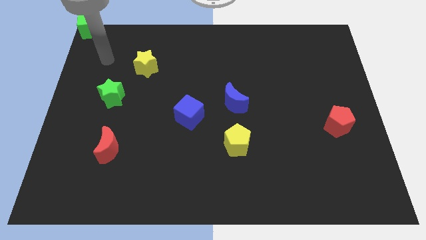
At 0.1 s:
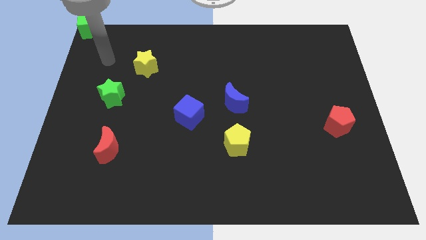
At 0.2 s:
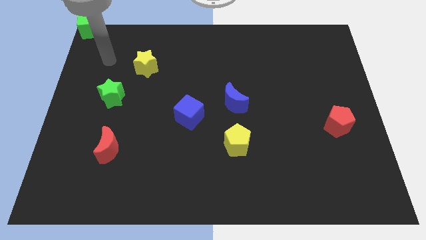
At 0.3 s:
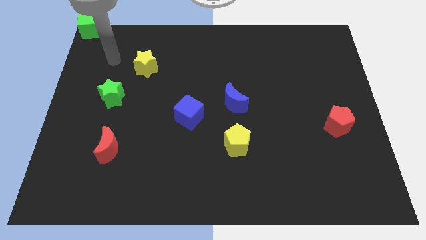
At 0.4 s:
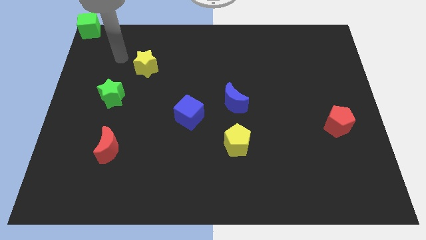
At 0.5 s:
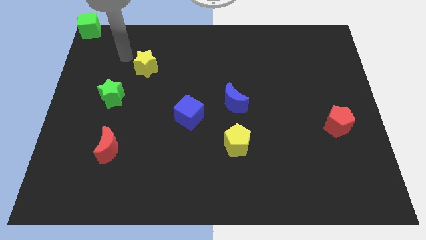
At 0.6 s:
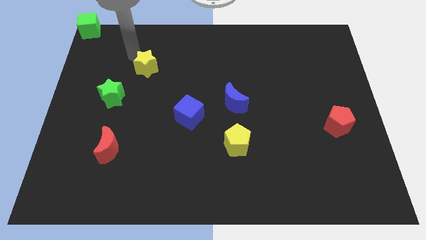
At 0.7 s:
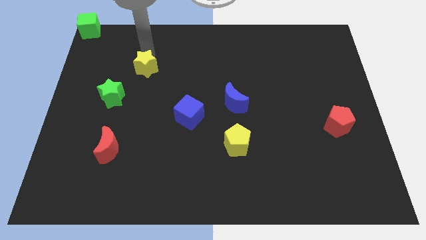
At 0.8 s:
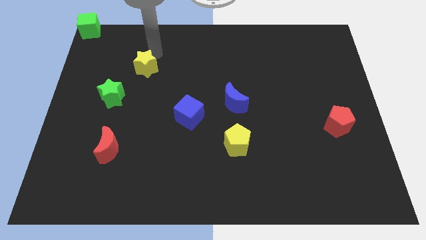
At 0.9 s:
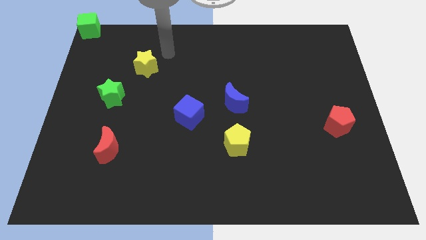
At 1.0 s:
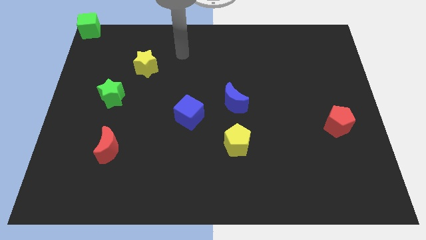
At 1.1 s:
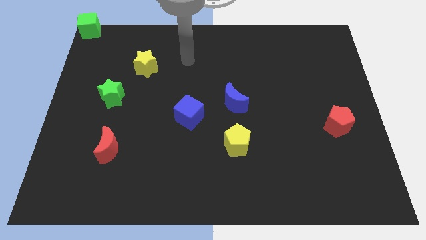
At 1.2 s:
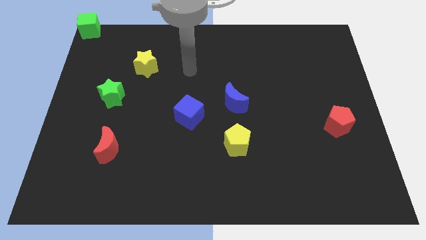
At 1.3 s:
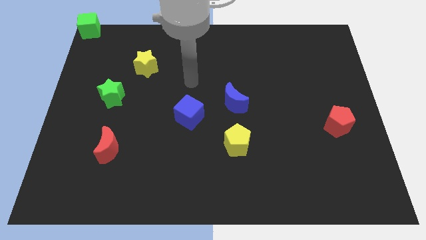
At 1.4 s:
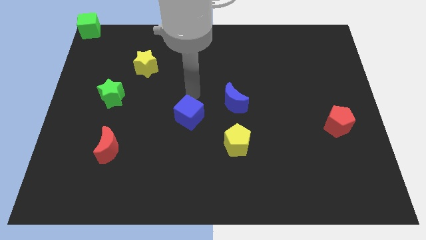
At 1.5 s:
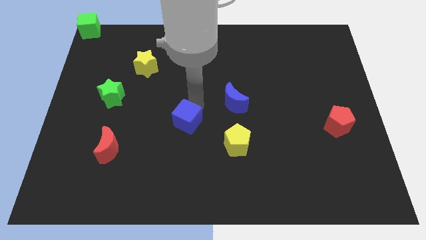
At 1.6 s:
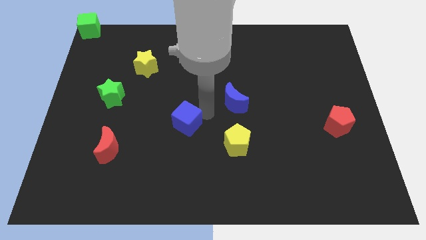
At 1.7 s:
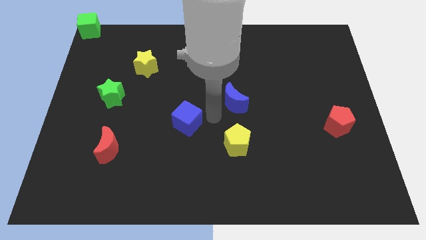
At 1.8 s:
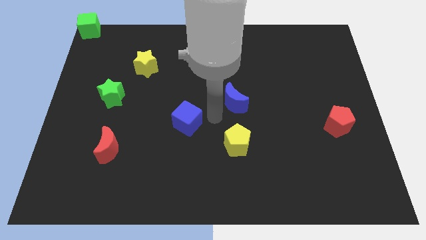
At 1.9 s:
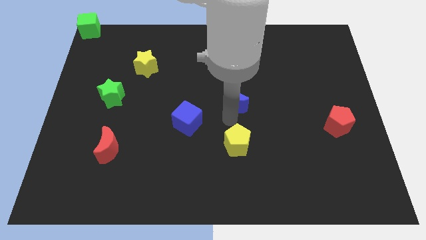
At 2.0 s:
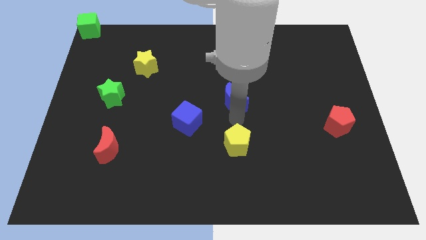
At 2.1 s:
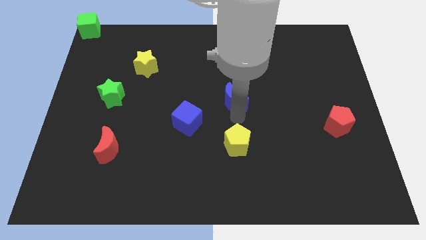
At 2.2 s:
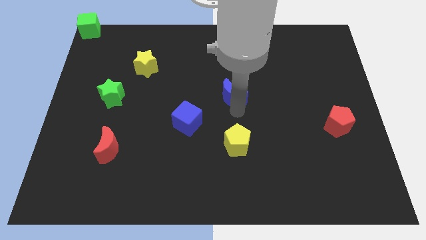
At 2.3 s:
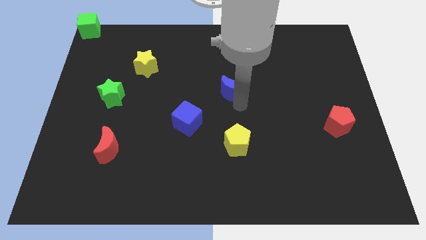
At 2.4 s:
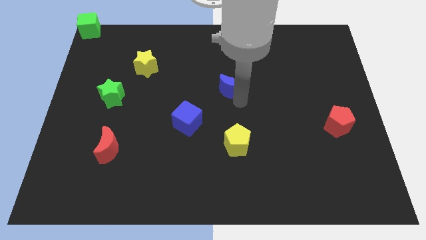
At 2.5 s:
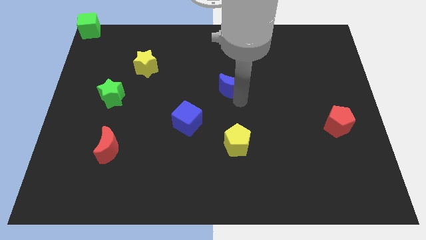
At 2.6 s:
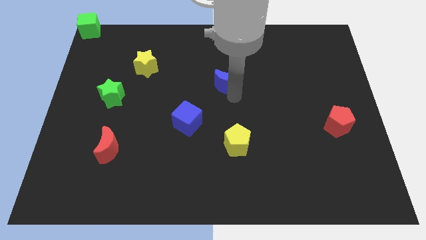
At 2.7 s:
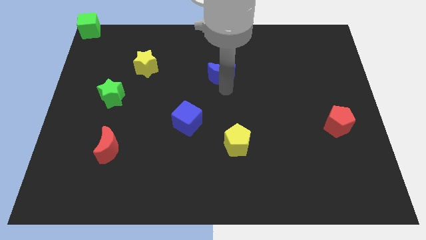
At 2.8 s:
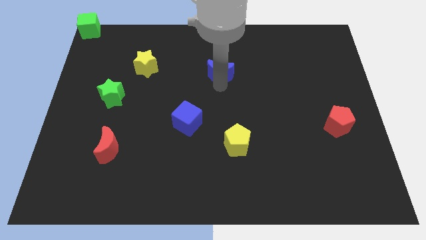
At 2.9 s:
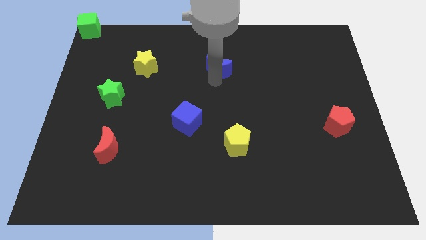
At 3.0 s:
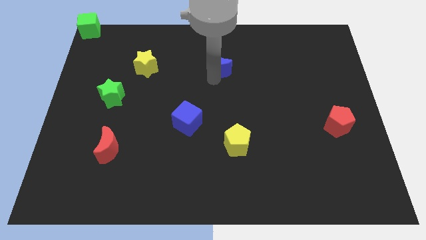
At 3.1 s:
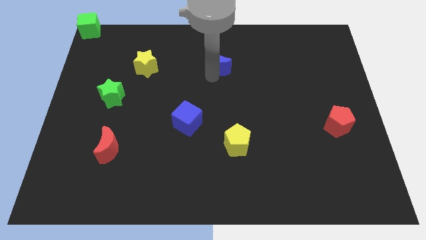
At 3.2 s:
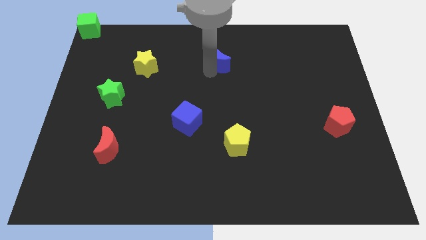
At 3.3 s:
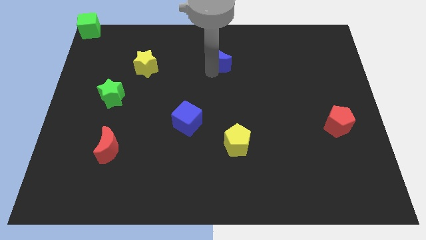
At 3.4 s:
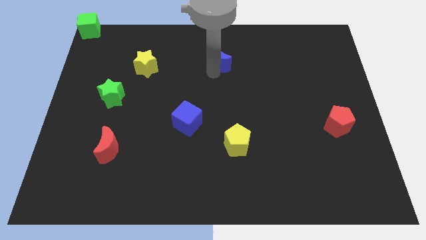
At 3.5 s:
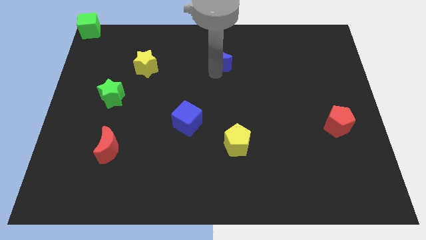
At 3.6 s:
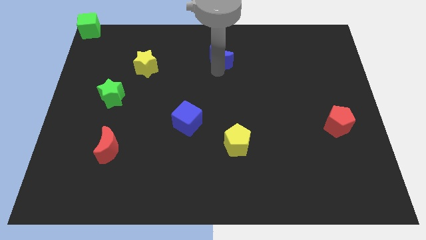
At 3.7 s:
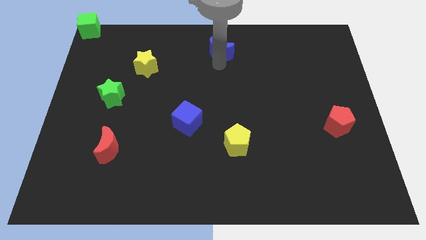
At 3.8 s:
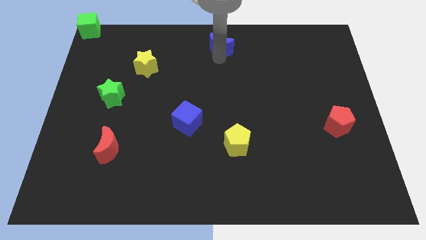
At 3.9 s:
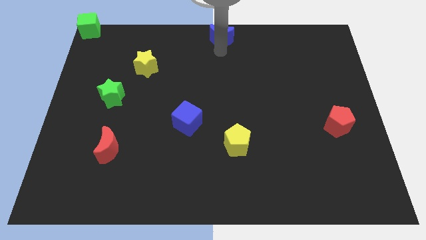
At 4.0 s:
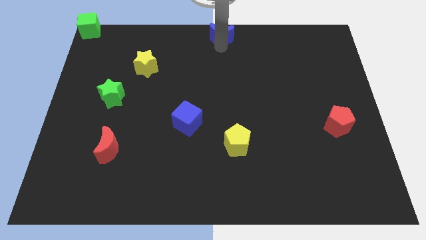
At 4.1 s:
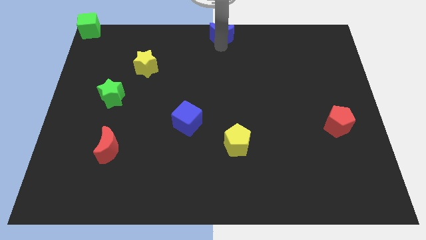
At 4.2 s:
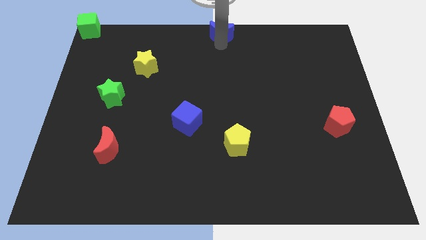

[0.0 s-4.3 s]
move the blue moon diagonally to the top right side of the yellow star

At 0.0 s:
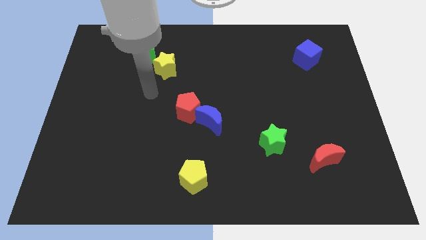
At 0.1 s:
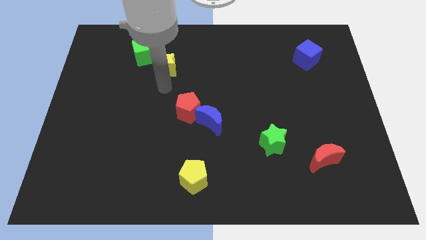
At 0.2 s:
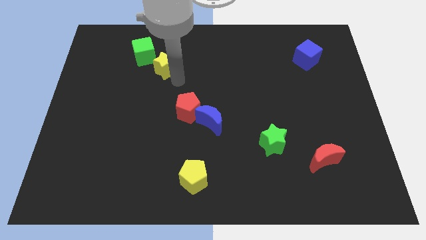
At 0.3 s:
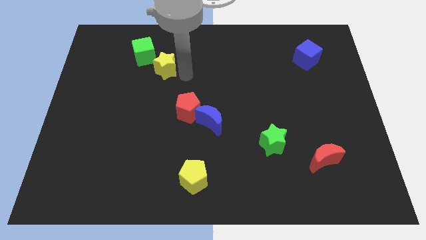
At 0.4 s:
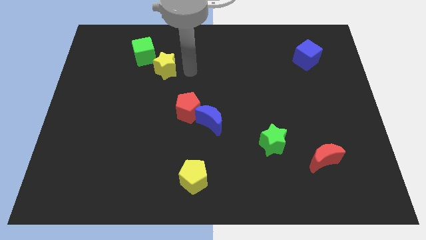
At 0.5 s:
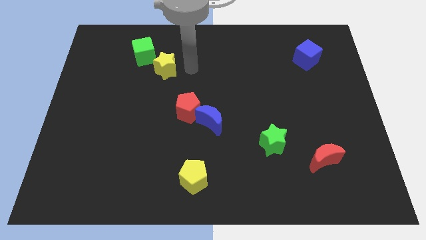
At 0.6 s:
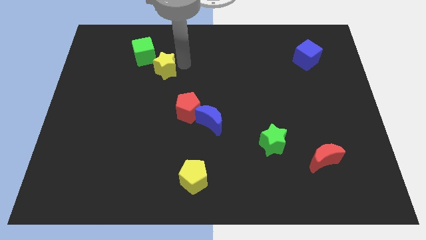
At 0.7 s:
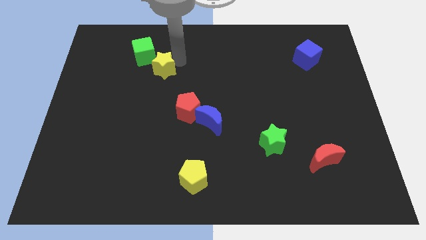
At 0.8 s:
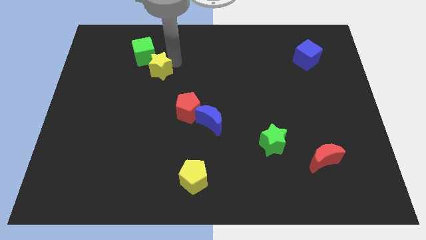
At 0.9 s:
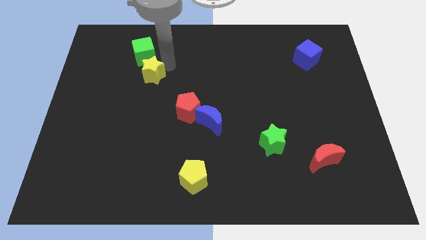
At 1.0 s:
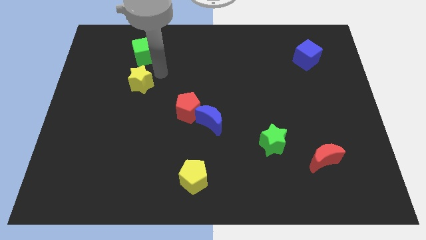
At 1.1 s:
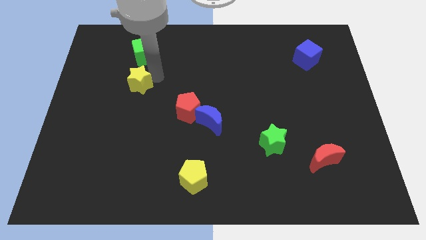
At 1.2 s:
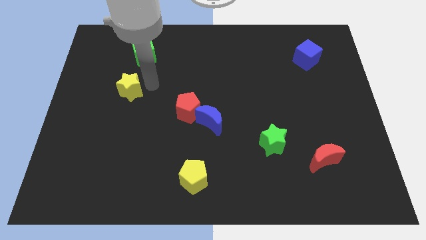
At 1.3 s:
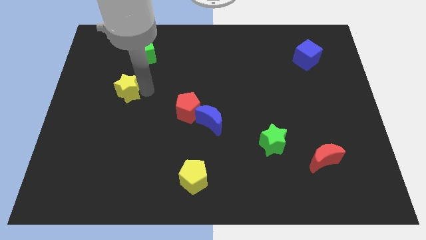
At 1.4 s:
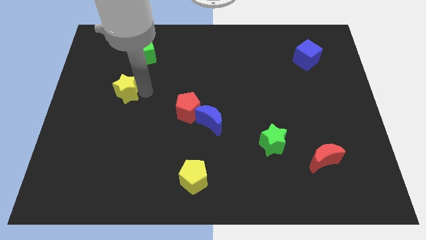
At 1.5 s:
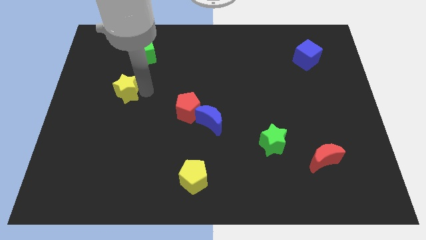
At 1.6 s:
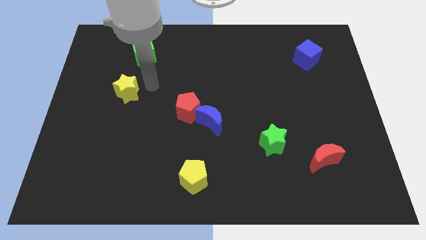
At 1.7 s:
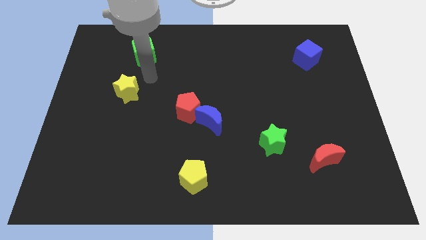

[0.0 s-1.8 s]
separate the yellow star away from the green cube

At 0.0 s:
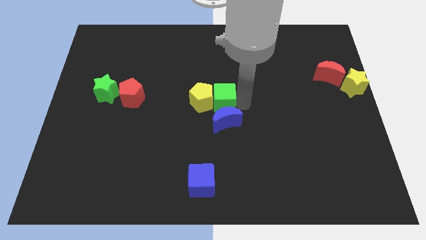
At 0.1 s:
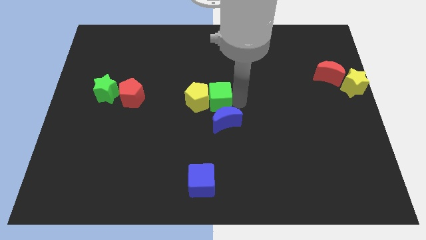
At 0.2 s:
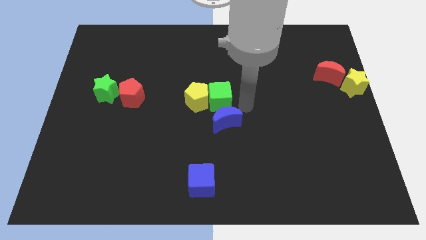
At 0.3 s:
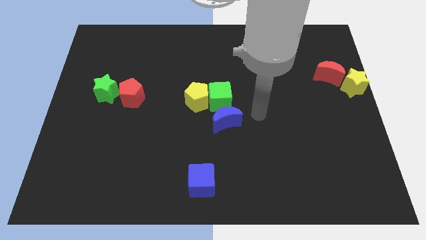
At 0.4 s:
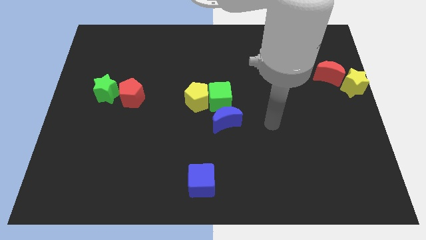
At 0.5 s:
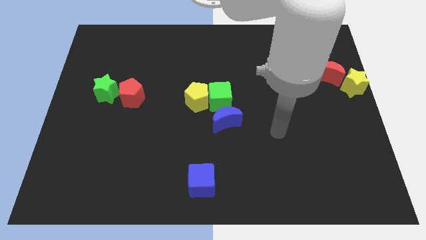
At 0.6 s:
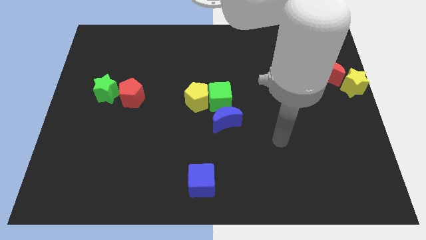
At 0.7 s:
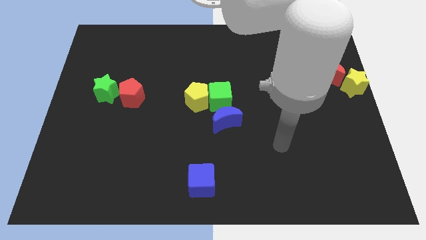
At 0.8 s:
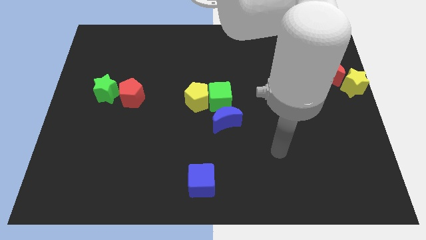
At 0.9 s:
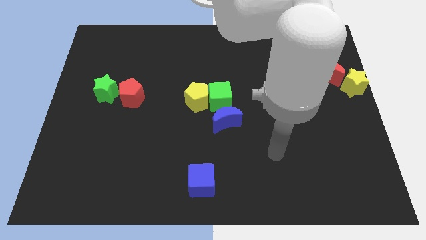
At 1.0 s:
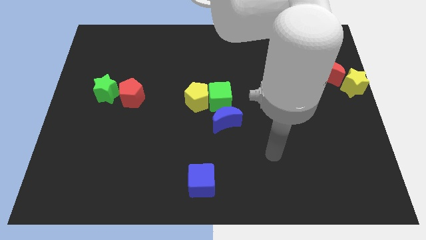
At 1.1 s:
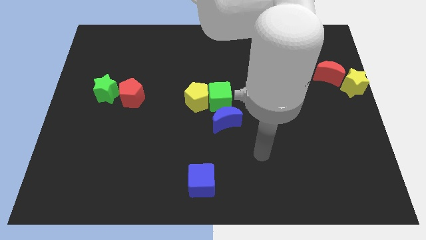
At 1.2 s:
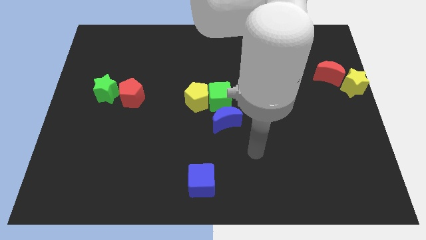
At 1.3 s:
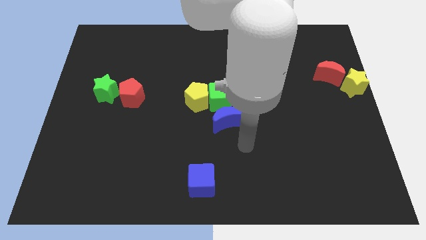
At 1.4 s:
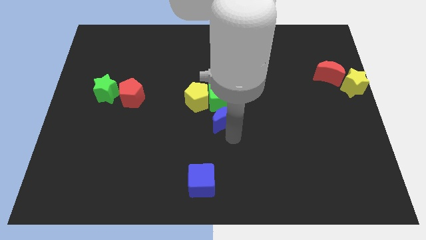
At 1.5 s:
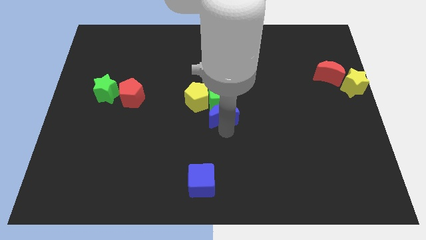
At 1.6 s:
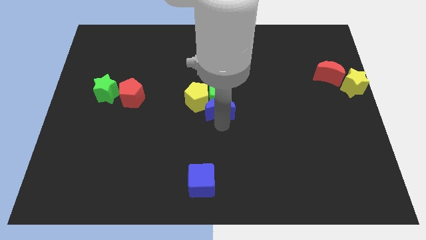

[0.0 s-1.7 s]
place your arm at the bottom of the blue moon

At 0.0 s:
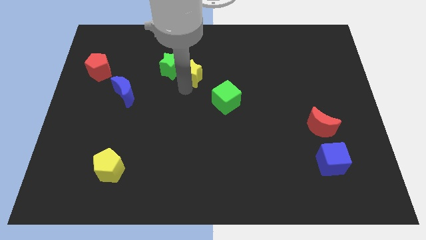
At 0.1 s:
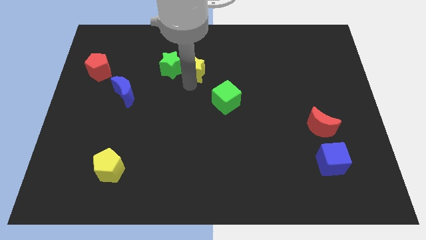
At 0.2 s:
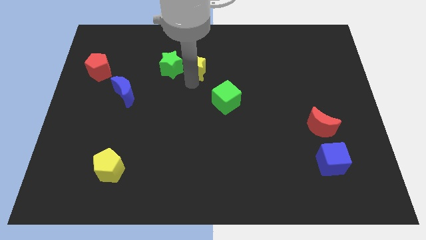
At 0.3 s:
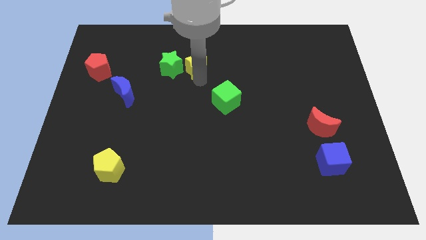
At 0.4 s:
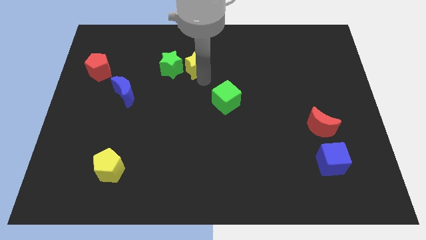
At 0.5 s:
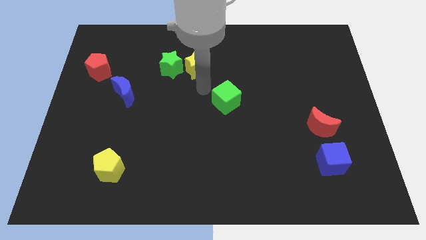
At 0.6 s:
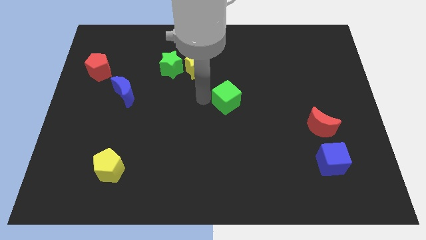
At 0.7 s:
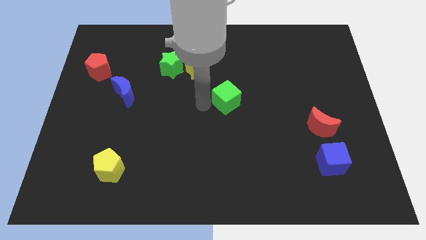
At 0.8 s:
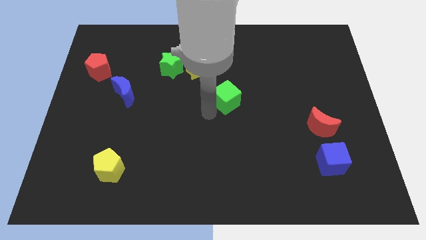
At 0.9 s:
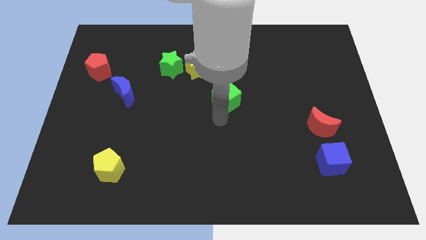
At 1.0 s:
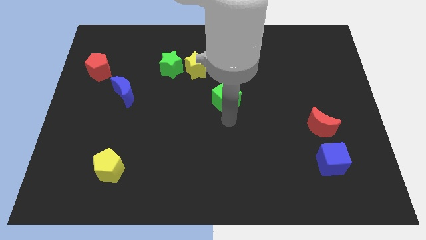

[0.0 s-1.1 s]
move the arm below the green cube

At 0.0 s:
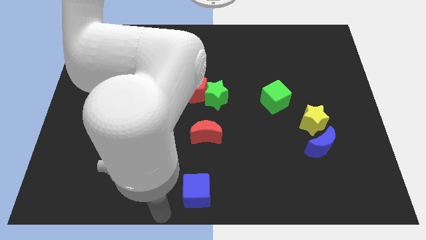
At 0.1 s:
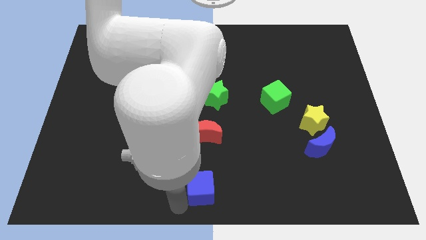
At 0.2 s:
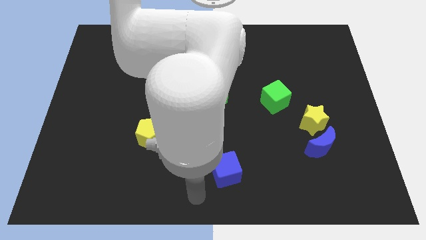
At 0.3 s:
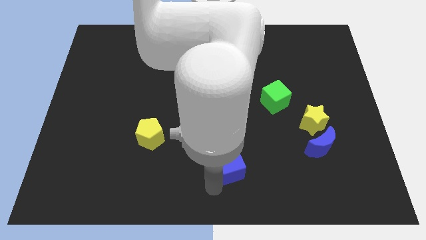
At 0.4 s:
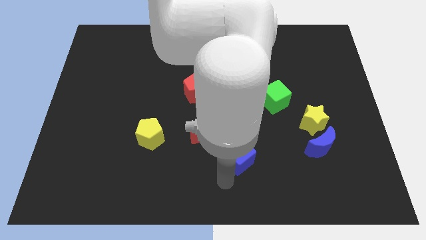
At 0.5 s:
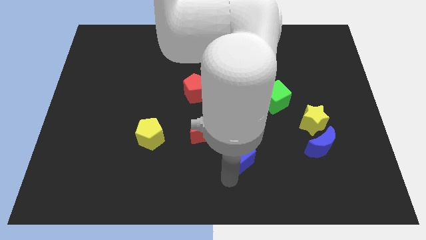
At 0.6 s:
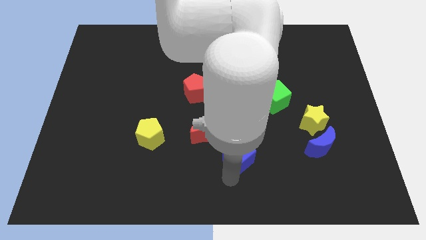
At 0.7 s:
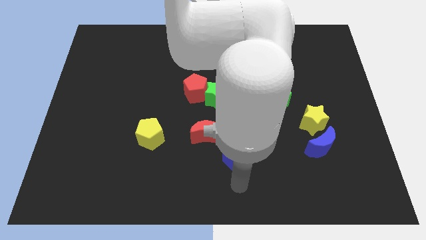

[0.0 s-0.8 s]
place blue cube on bottom right of red moon
